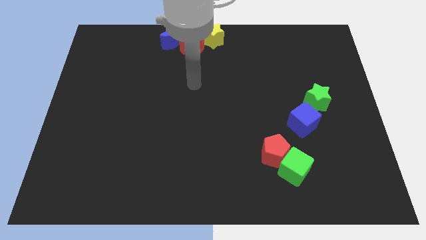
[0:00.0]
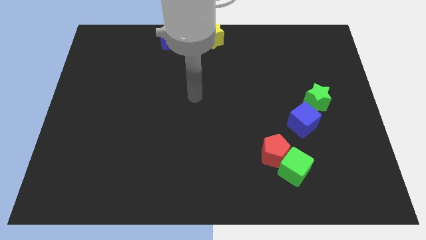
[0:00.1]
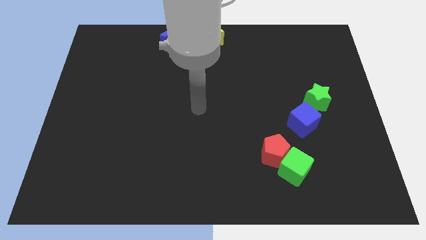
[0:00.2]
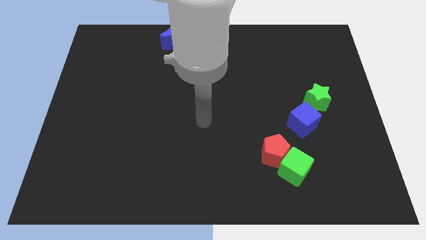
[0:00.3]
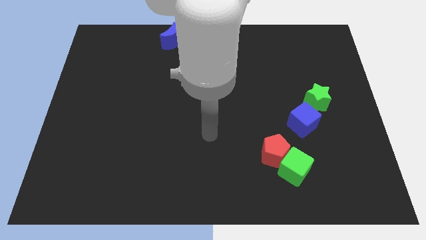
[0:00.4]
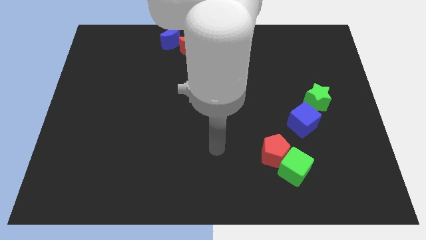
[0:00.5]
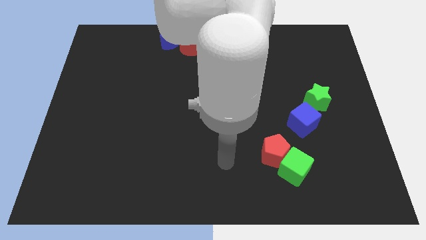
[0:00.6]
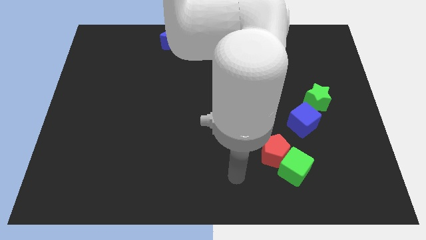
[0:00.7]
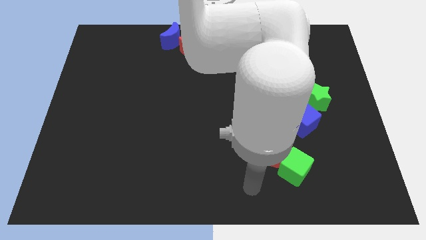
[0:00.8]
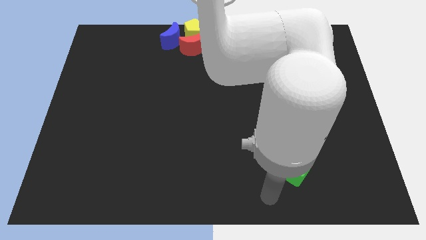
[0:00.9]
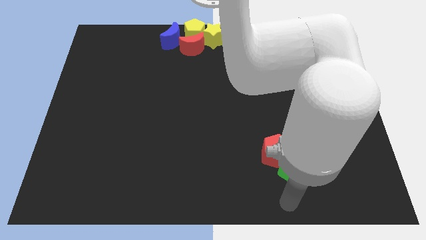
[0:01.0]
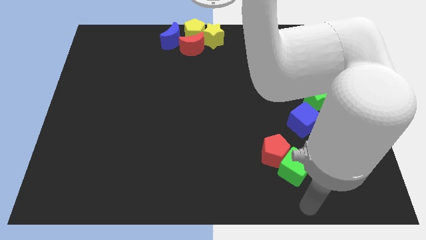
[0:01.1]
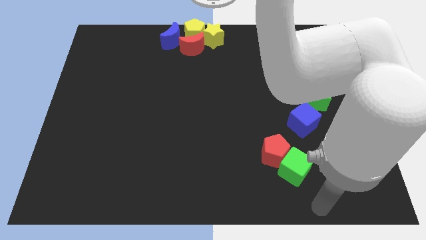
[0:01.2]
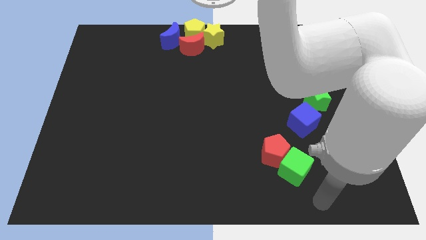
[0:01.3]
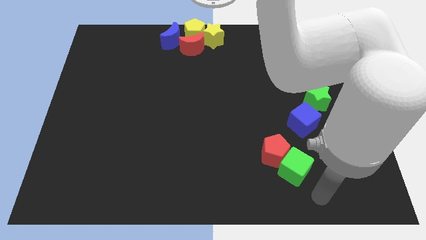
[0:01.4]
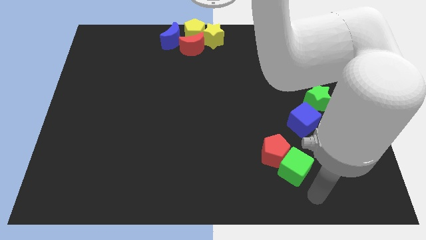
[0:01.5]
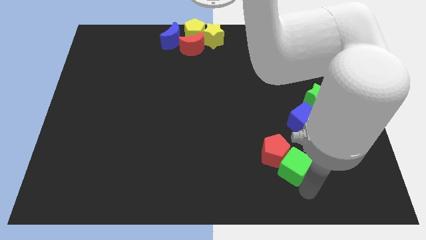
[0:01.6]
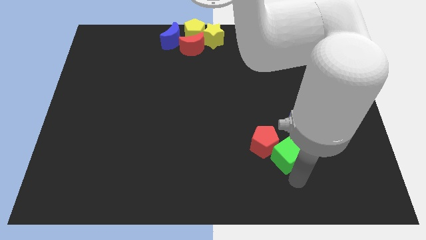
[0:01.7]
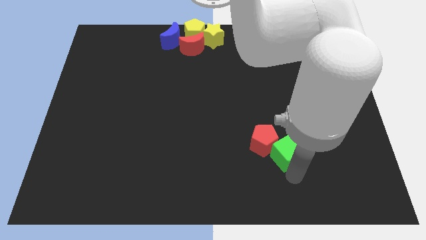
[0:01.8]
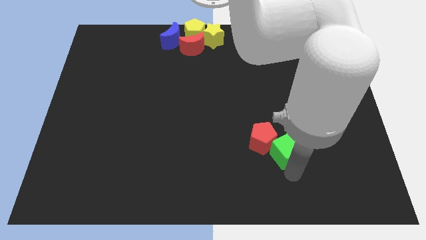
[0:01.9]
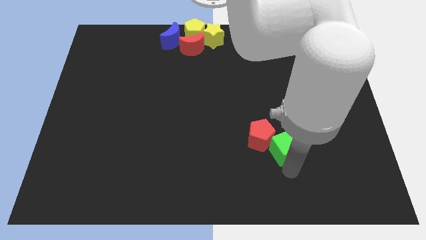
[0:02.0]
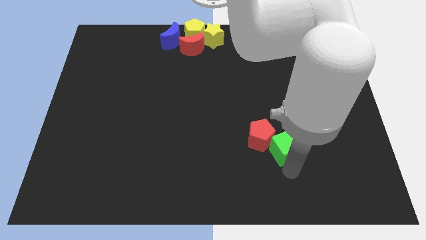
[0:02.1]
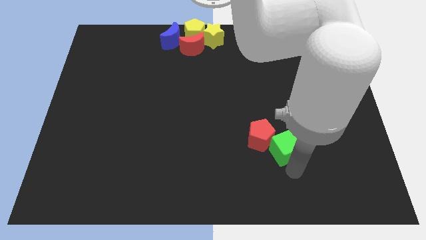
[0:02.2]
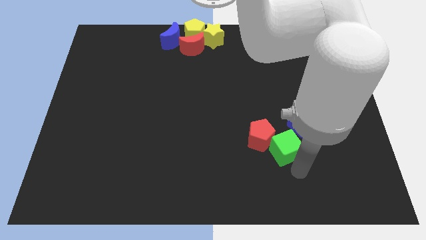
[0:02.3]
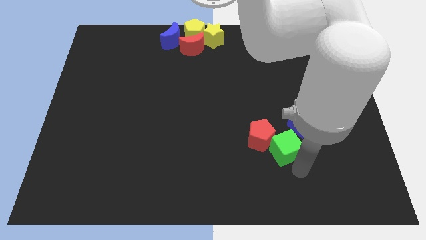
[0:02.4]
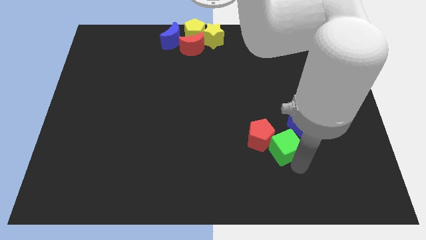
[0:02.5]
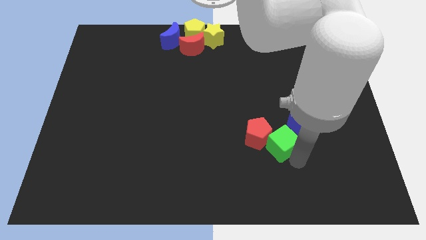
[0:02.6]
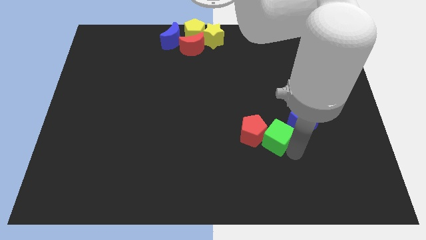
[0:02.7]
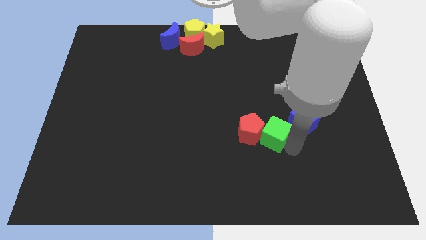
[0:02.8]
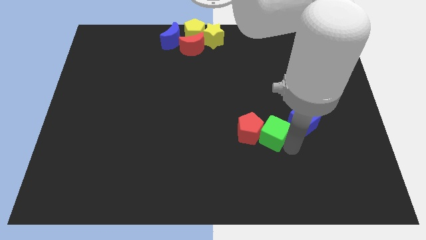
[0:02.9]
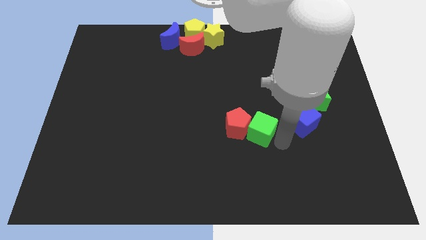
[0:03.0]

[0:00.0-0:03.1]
push green cube along with red pentagon towards center

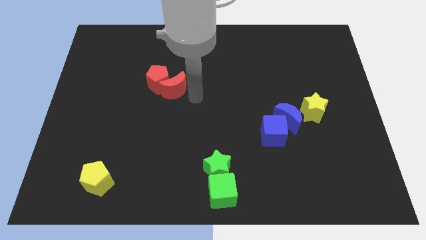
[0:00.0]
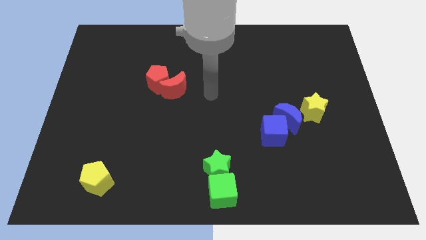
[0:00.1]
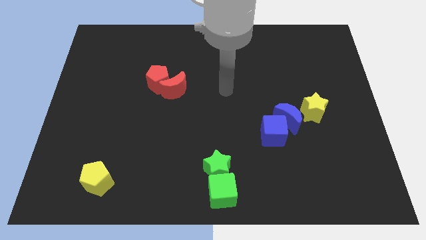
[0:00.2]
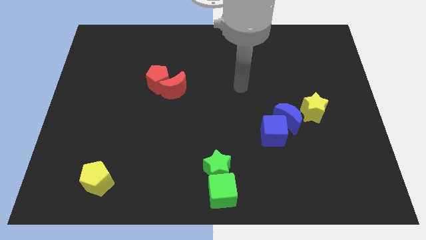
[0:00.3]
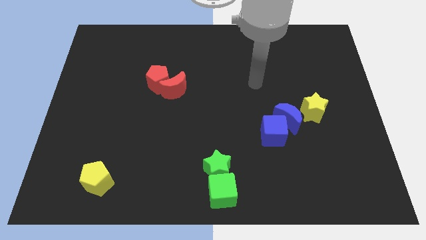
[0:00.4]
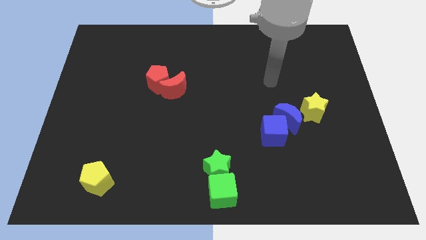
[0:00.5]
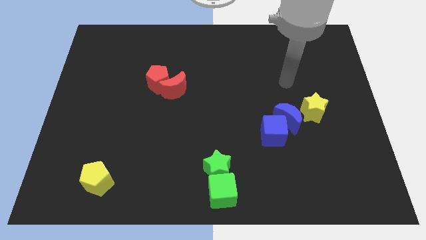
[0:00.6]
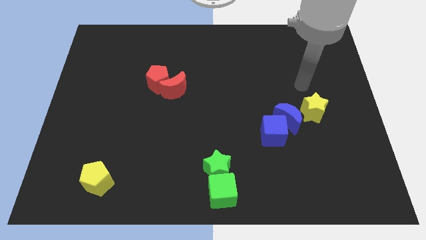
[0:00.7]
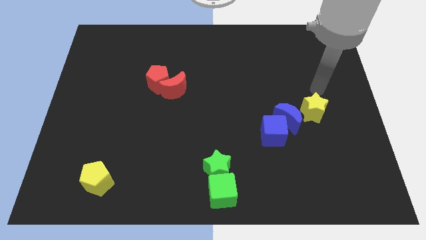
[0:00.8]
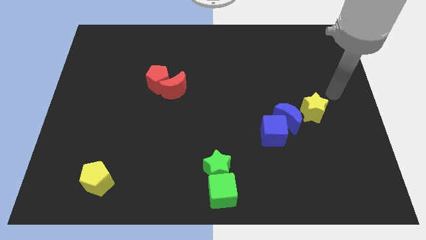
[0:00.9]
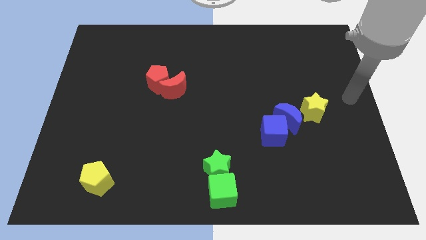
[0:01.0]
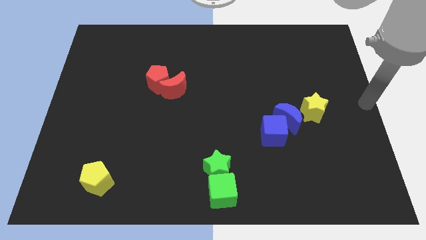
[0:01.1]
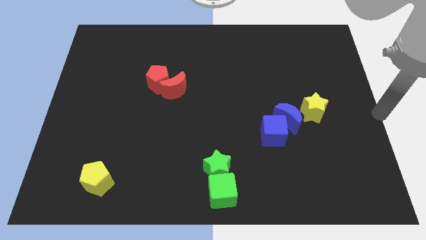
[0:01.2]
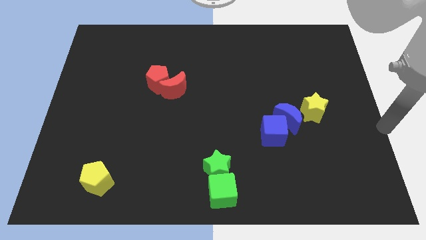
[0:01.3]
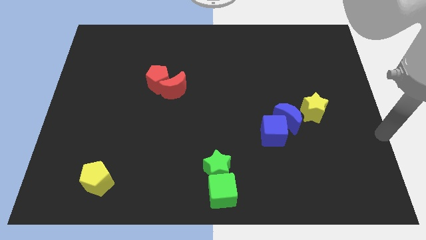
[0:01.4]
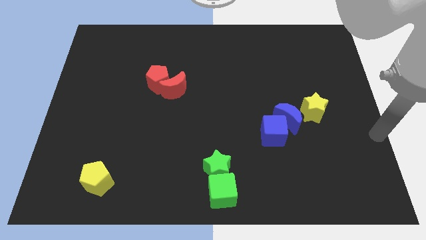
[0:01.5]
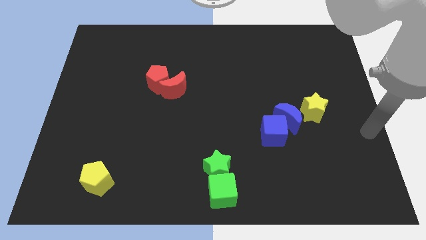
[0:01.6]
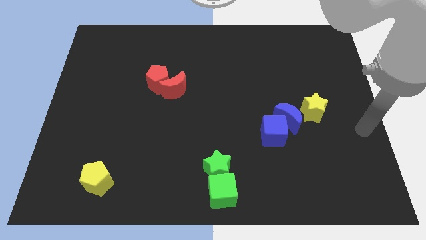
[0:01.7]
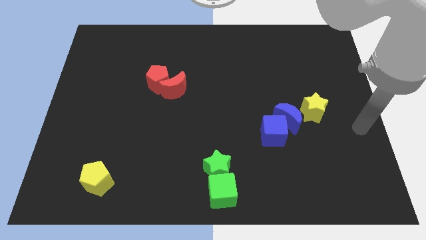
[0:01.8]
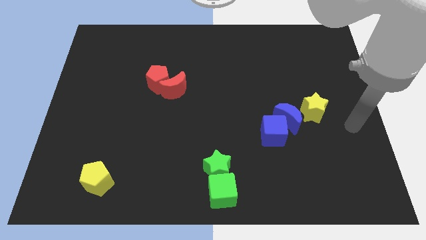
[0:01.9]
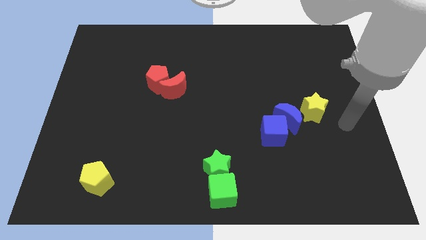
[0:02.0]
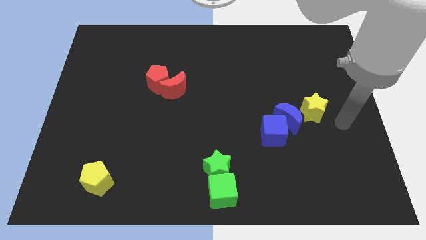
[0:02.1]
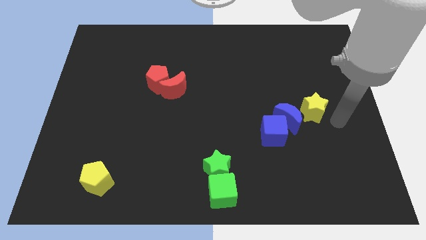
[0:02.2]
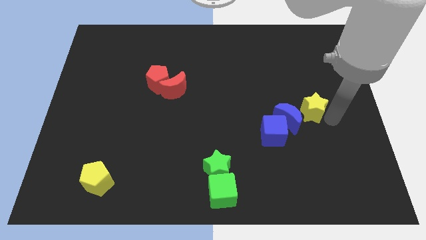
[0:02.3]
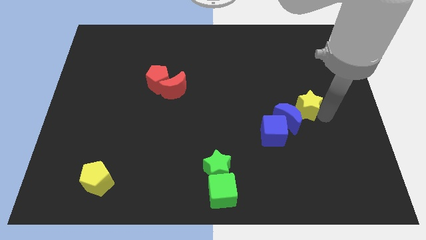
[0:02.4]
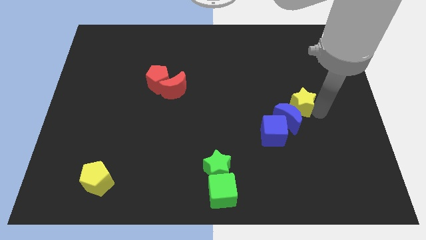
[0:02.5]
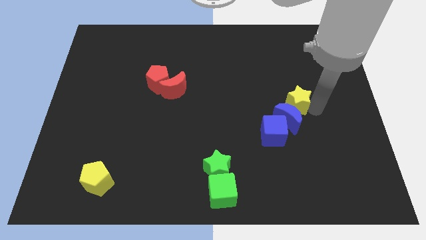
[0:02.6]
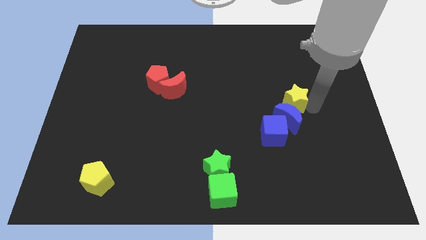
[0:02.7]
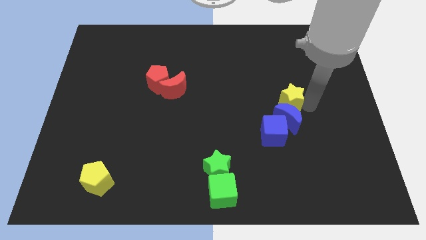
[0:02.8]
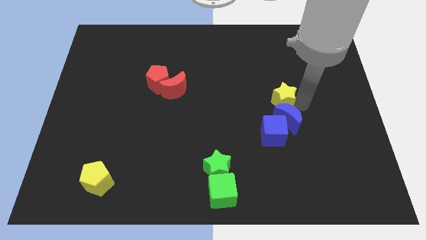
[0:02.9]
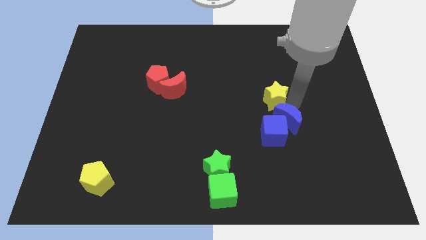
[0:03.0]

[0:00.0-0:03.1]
place the yellow star above the blue crescent

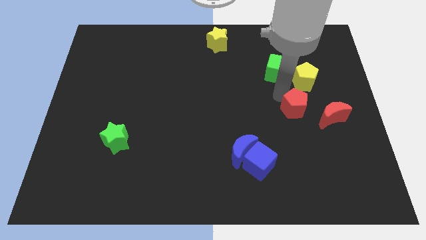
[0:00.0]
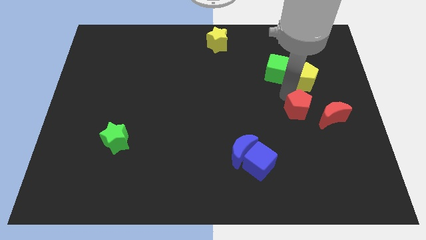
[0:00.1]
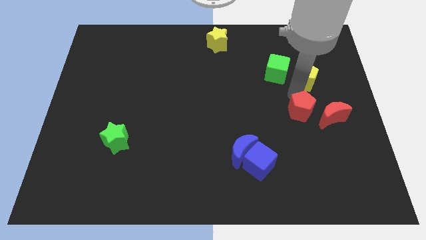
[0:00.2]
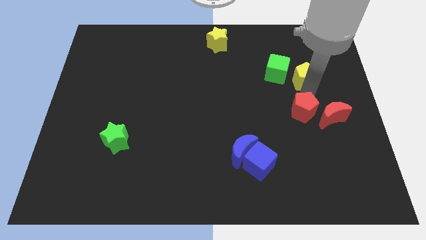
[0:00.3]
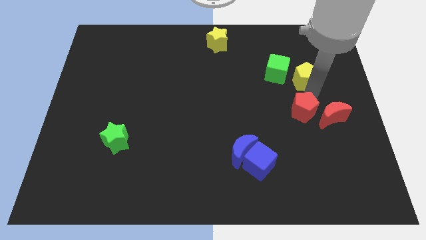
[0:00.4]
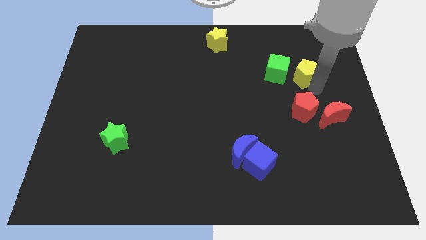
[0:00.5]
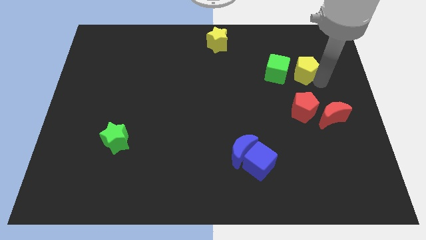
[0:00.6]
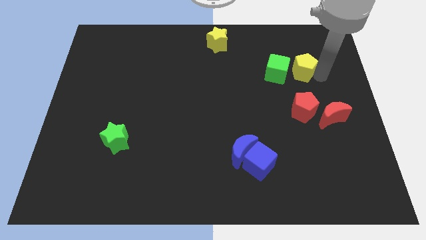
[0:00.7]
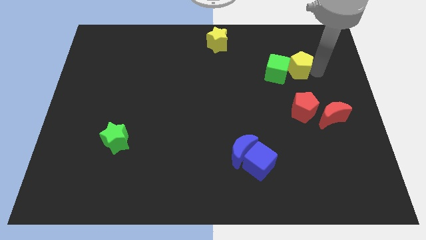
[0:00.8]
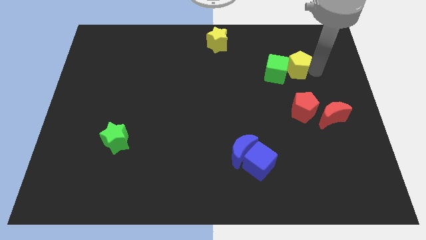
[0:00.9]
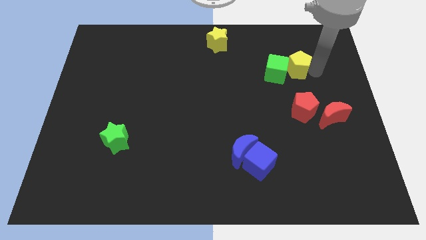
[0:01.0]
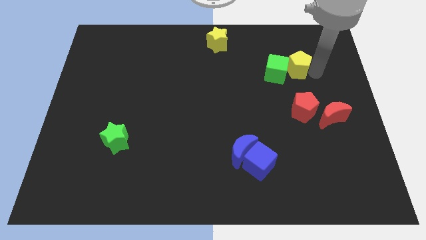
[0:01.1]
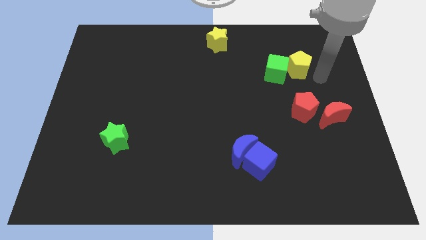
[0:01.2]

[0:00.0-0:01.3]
move the red pentagon towards red moon

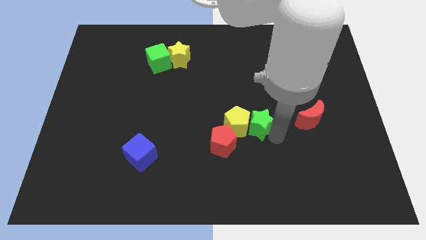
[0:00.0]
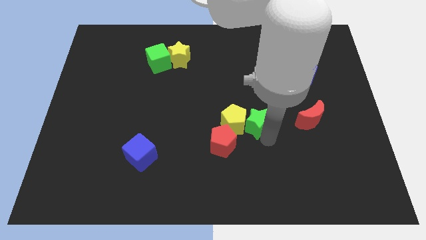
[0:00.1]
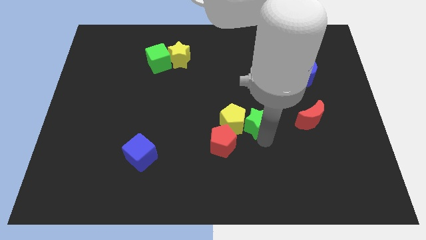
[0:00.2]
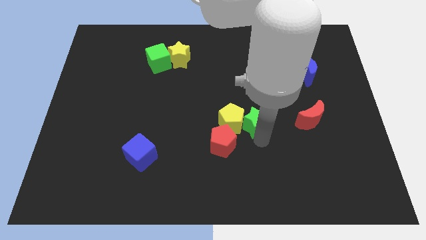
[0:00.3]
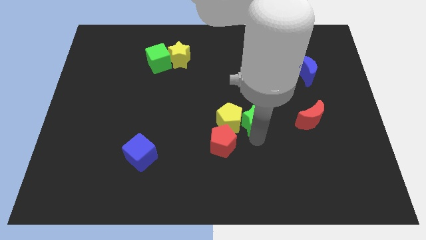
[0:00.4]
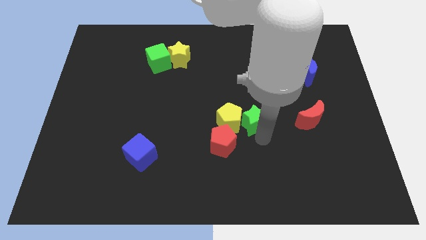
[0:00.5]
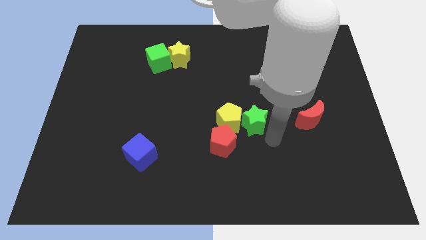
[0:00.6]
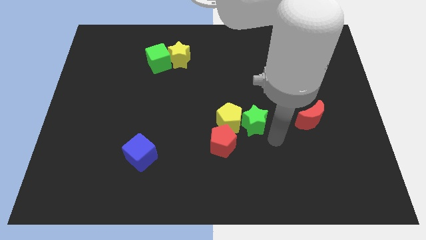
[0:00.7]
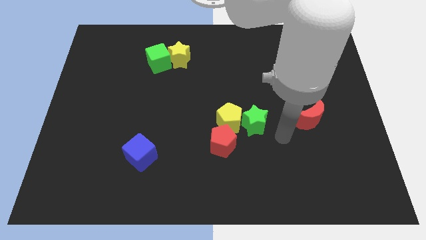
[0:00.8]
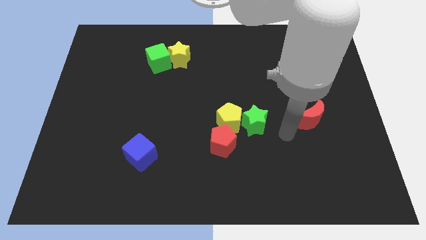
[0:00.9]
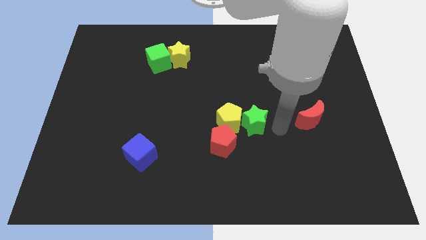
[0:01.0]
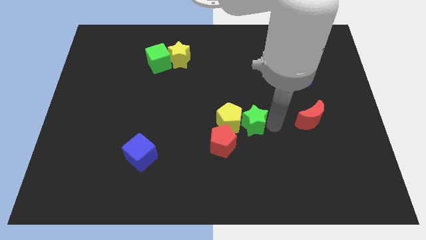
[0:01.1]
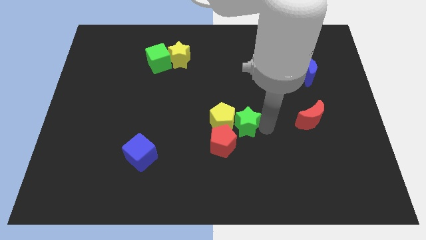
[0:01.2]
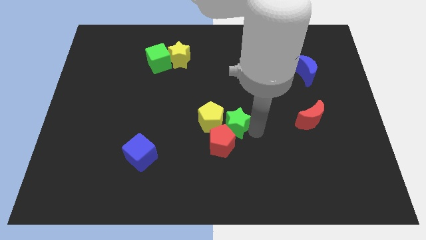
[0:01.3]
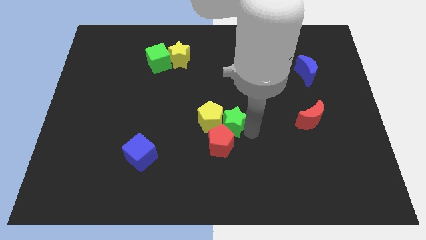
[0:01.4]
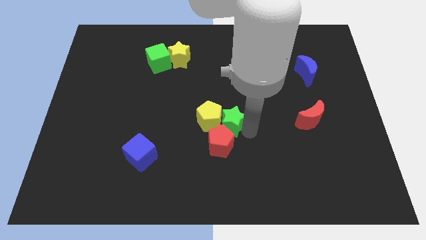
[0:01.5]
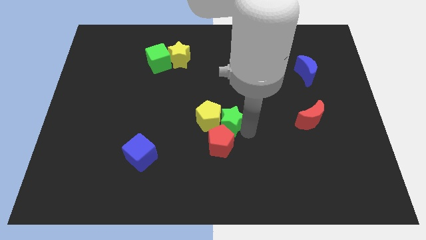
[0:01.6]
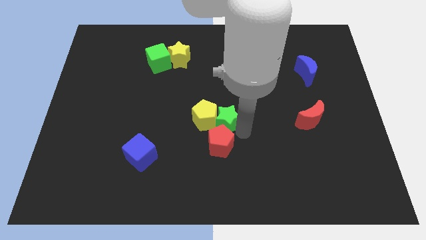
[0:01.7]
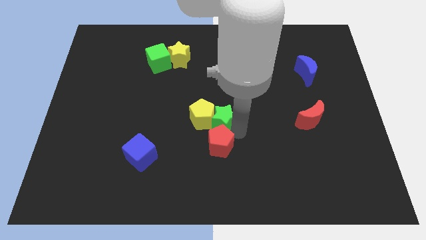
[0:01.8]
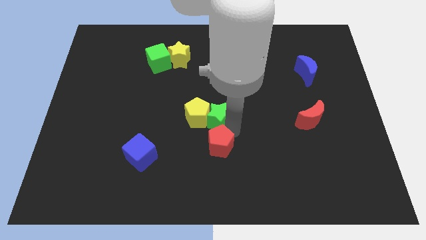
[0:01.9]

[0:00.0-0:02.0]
push the green star to the top of the red pentagon along with the yellow pentagon
